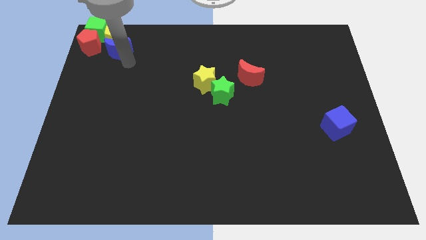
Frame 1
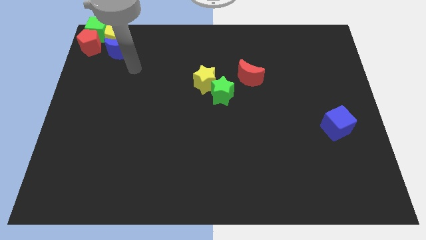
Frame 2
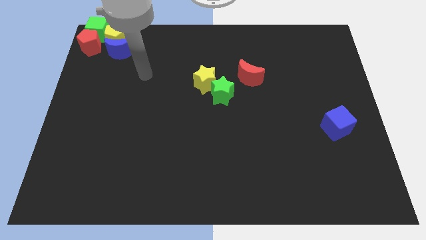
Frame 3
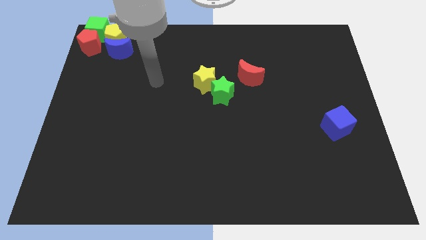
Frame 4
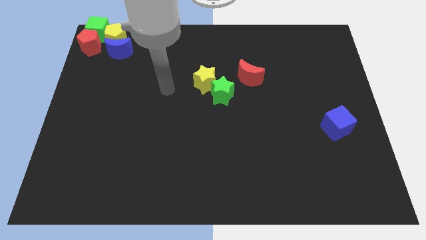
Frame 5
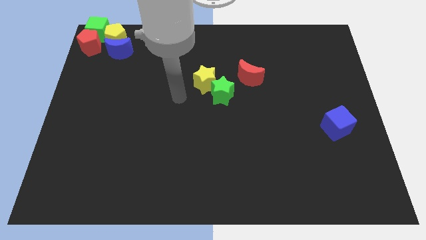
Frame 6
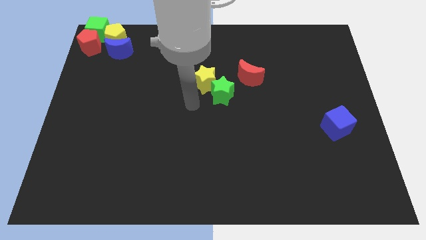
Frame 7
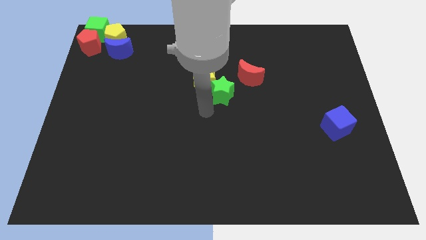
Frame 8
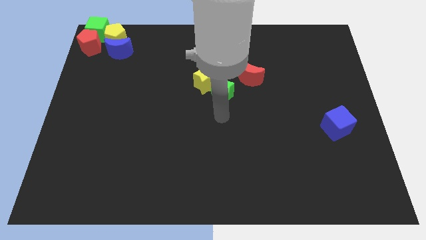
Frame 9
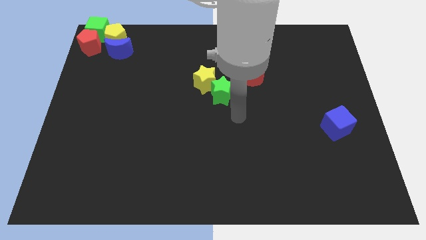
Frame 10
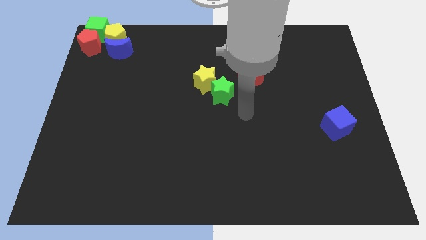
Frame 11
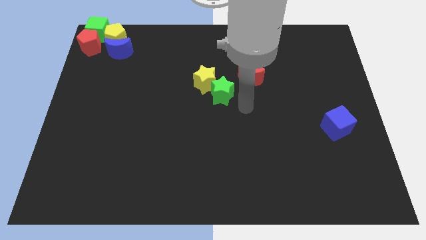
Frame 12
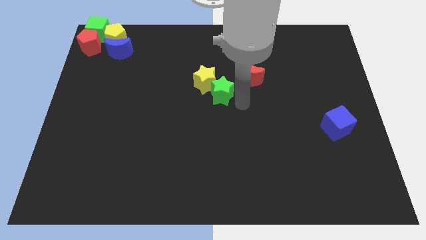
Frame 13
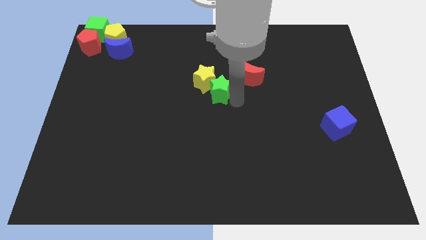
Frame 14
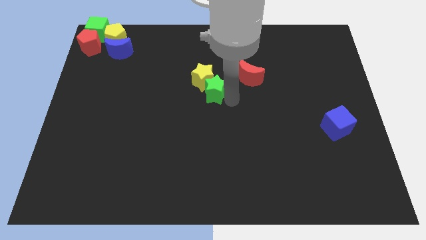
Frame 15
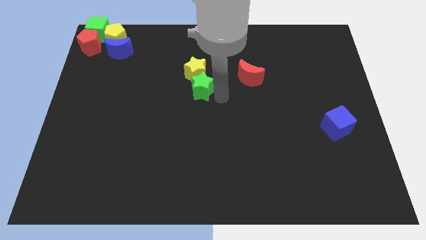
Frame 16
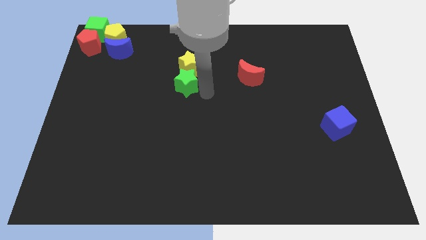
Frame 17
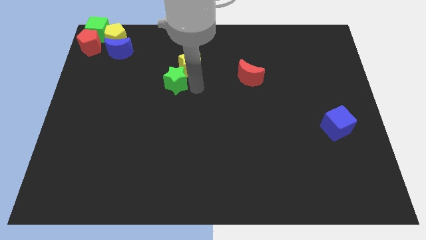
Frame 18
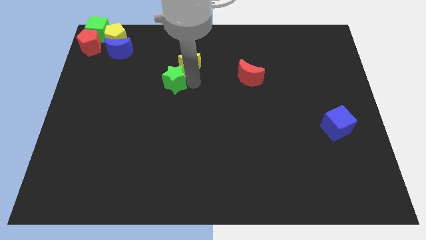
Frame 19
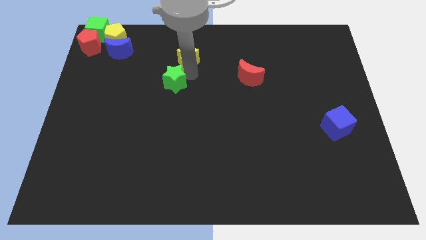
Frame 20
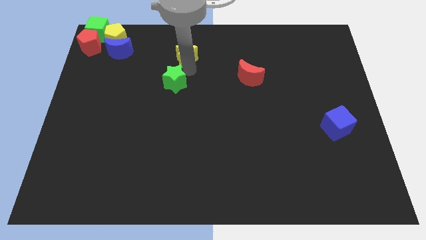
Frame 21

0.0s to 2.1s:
separate the yellow star and green star

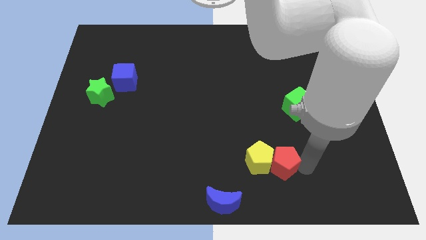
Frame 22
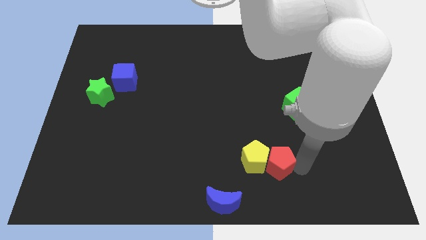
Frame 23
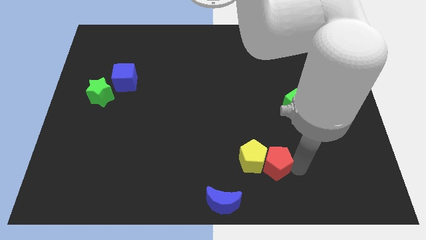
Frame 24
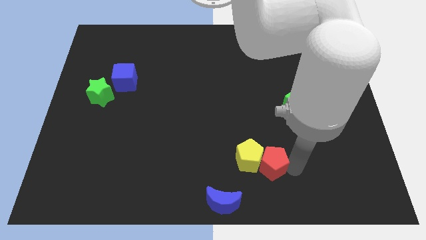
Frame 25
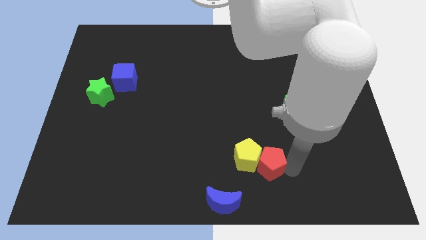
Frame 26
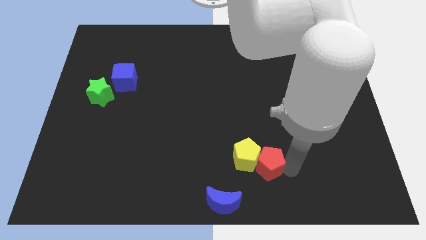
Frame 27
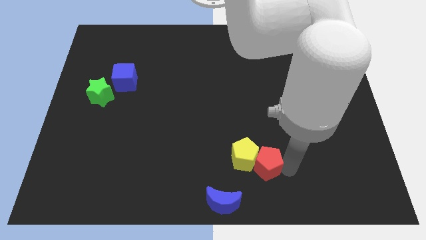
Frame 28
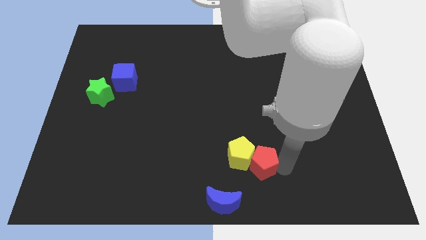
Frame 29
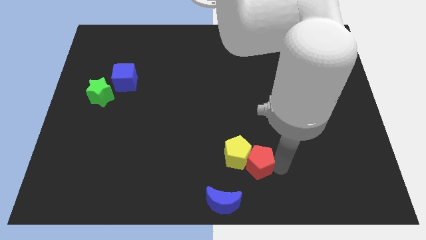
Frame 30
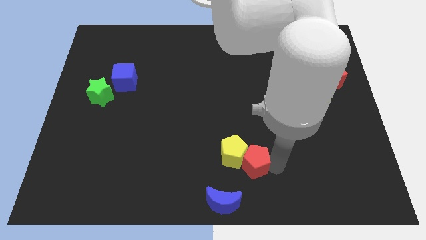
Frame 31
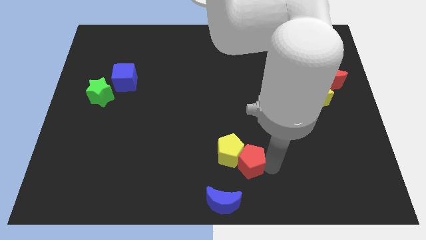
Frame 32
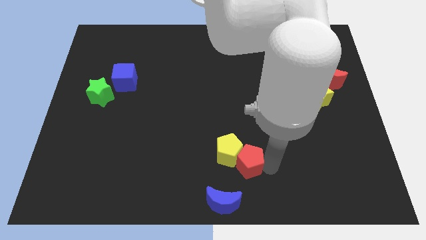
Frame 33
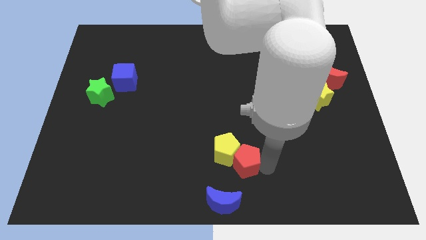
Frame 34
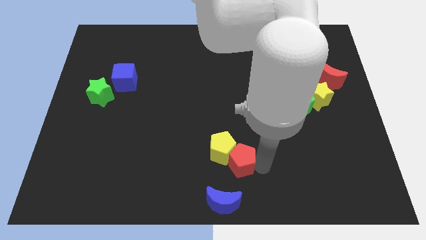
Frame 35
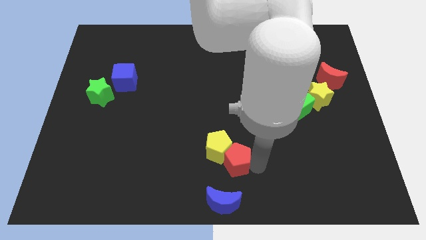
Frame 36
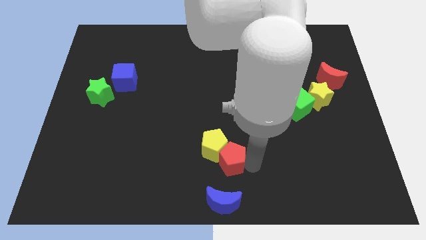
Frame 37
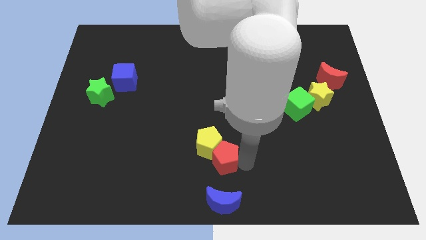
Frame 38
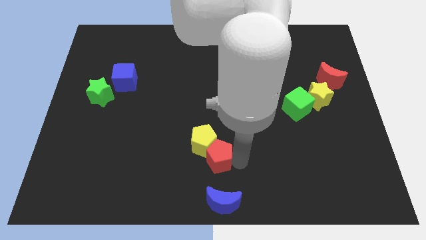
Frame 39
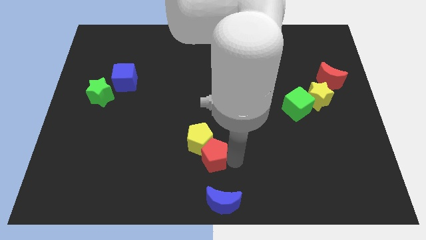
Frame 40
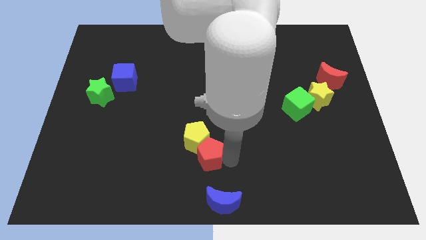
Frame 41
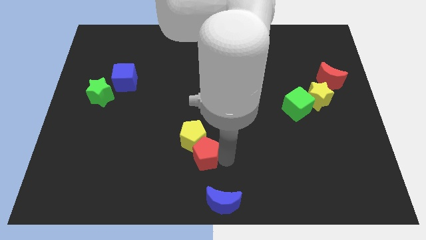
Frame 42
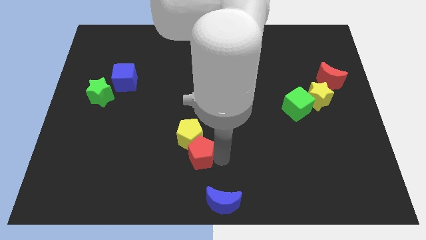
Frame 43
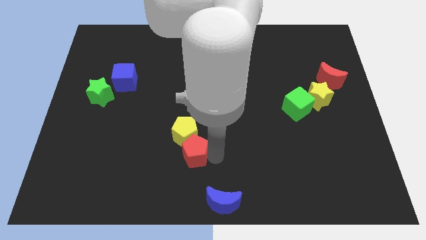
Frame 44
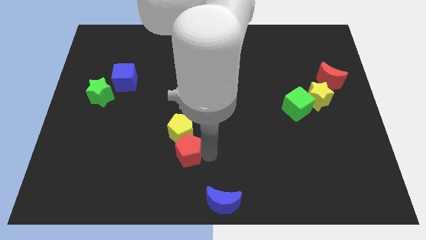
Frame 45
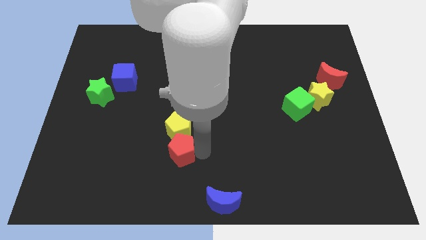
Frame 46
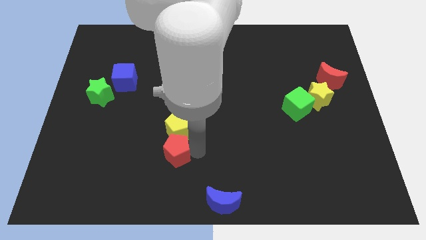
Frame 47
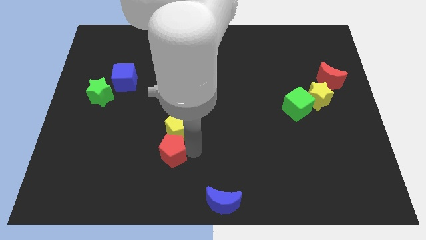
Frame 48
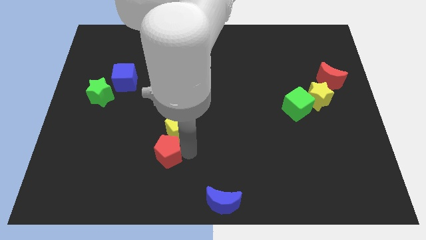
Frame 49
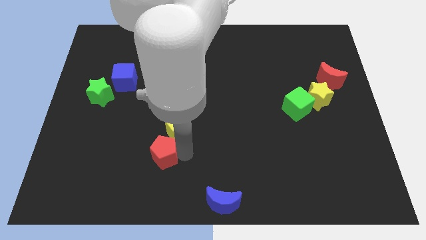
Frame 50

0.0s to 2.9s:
move yellow pentagon and red pentagon towards left side

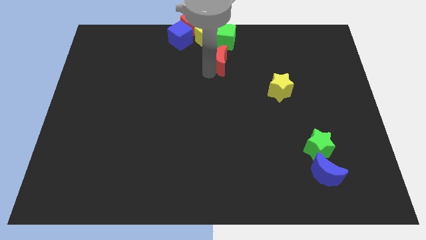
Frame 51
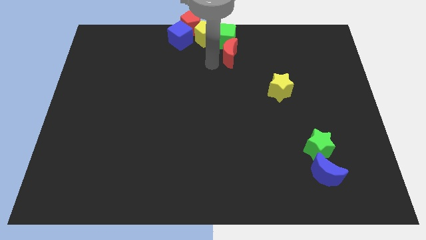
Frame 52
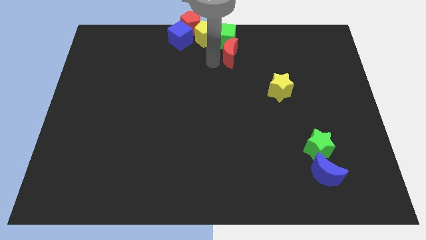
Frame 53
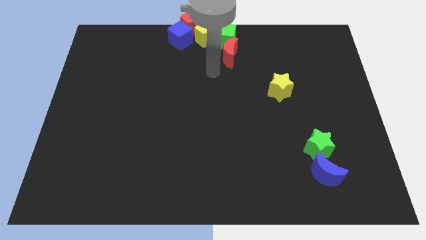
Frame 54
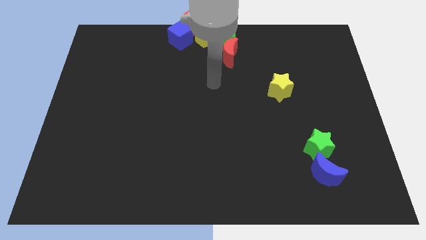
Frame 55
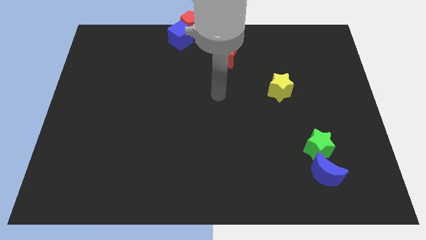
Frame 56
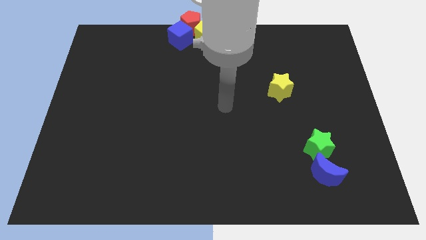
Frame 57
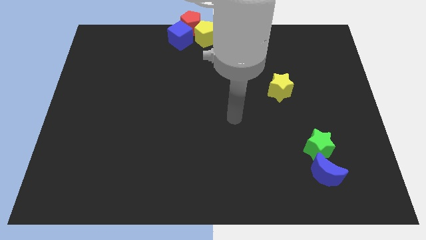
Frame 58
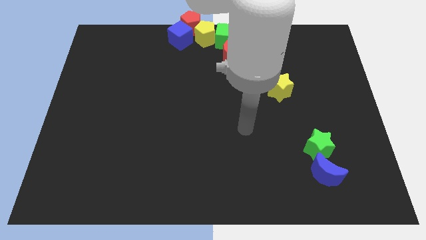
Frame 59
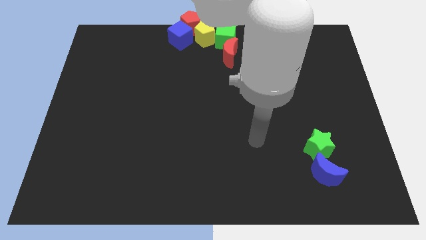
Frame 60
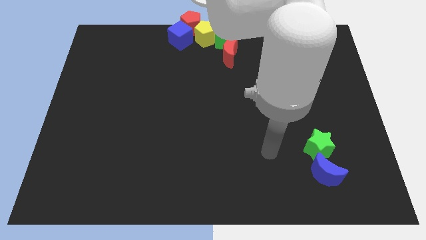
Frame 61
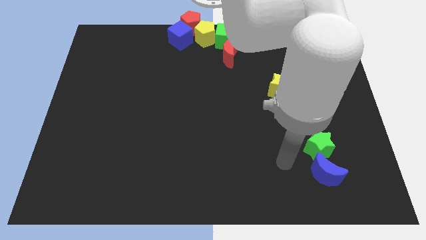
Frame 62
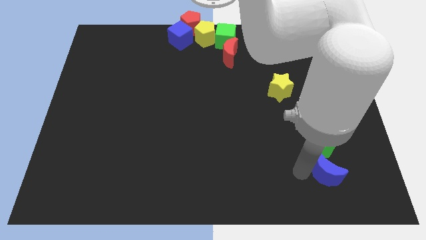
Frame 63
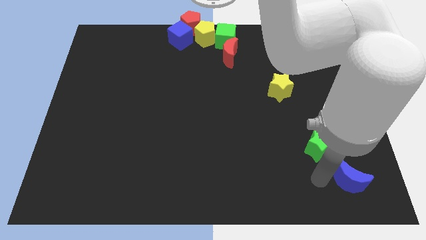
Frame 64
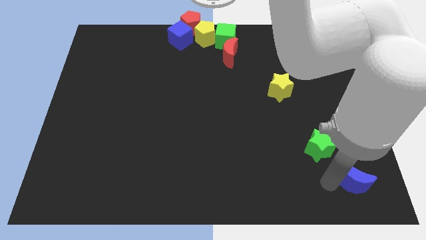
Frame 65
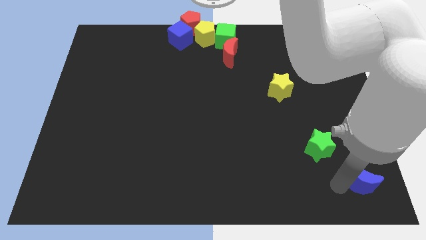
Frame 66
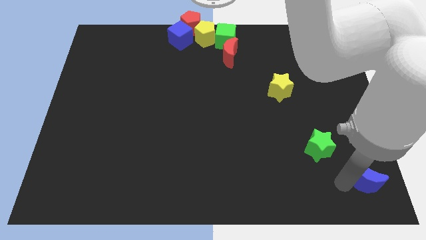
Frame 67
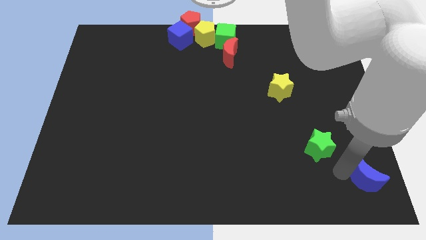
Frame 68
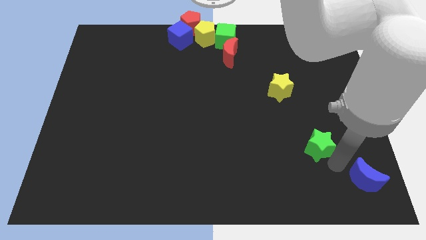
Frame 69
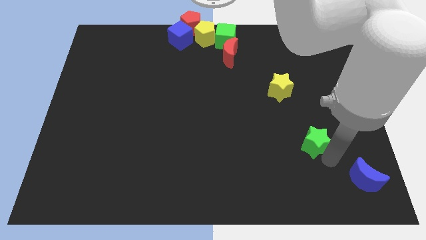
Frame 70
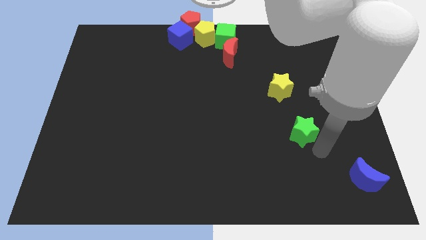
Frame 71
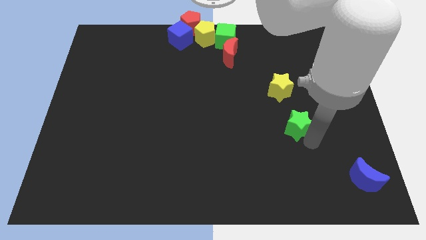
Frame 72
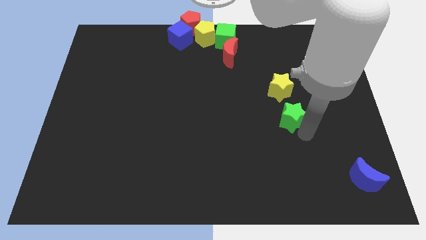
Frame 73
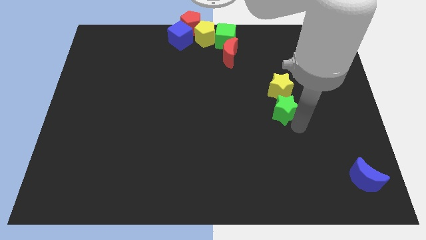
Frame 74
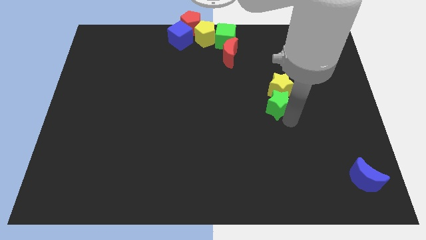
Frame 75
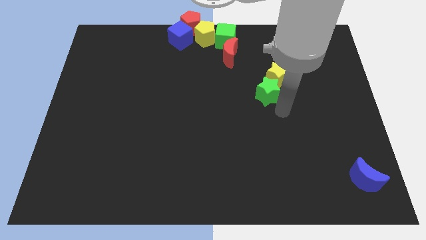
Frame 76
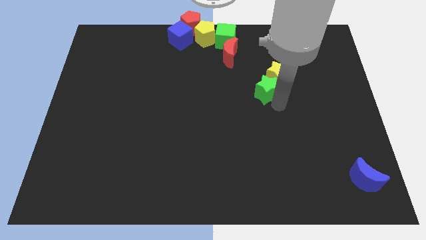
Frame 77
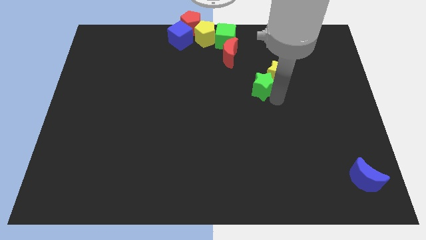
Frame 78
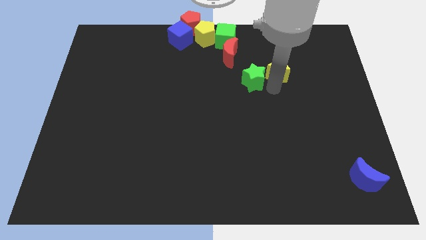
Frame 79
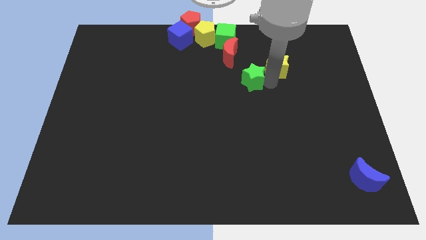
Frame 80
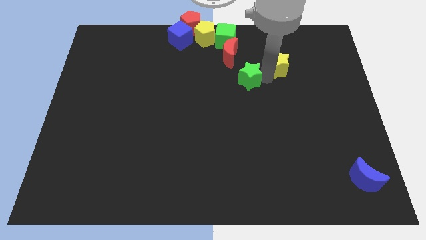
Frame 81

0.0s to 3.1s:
push the green star into yellow star

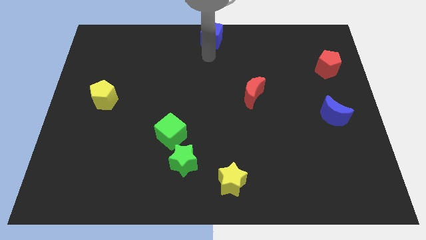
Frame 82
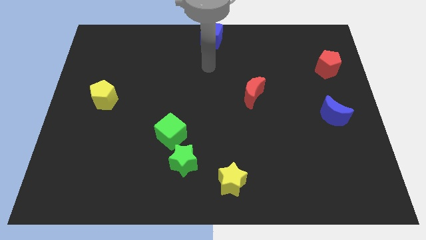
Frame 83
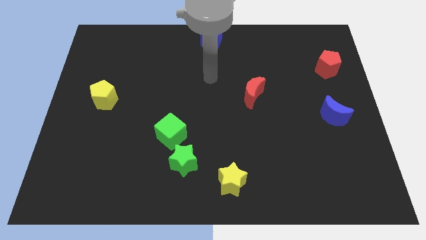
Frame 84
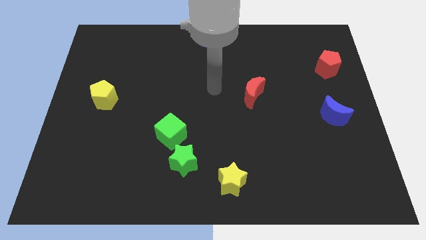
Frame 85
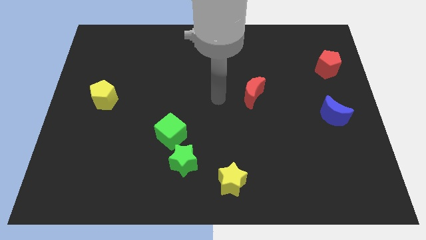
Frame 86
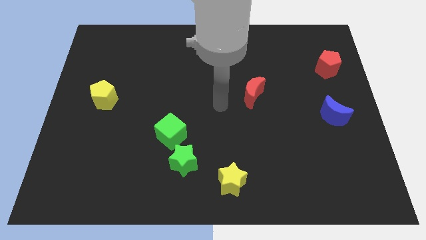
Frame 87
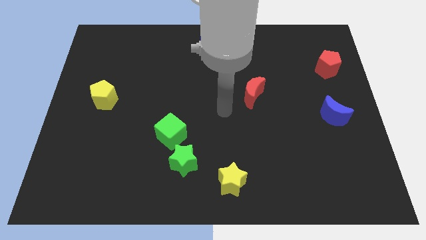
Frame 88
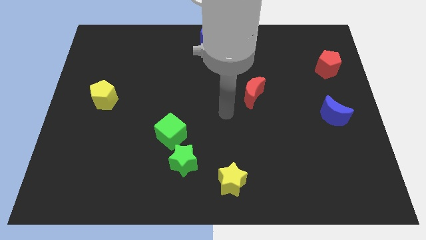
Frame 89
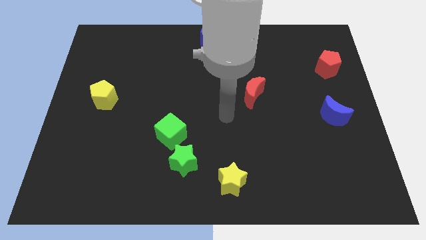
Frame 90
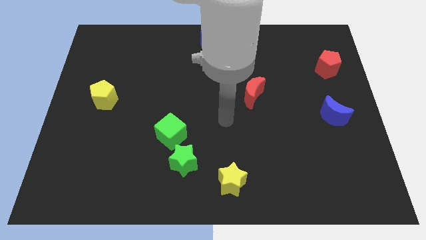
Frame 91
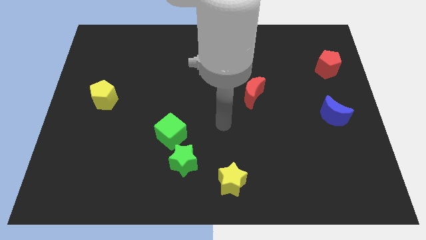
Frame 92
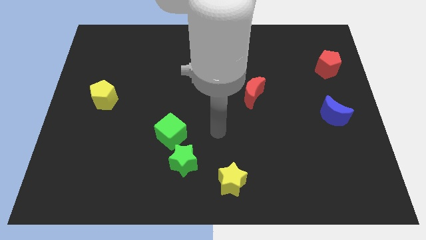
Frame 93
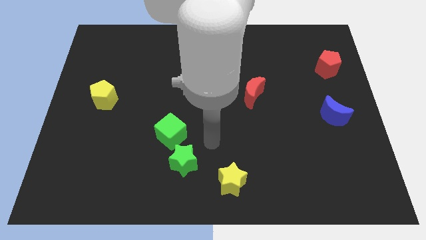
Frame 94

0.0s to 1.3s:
move your arm away from the blue cube
